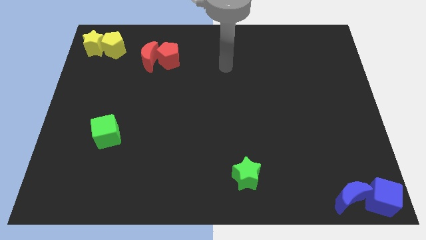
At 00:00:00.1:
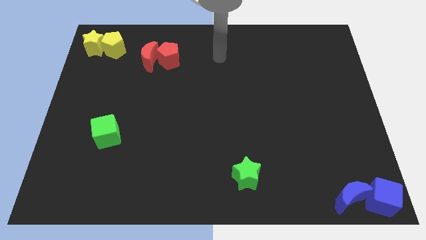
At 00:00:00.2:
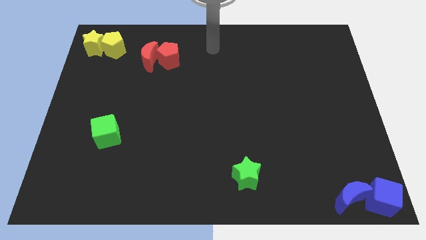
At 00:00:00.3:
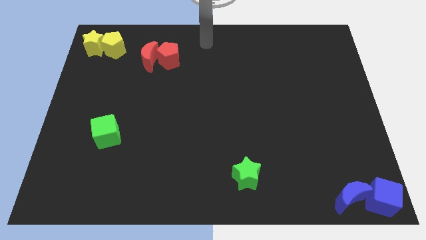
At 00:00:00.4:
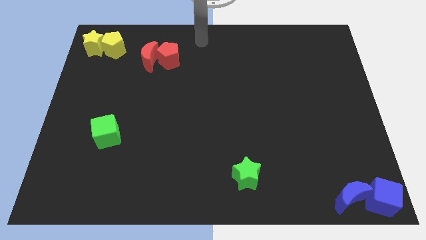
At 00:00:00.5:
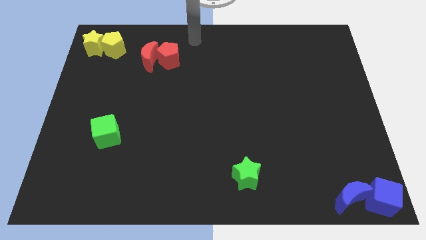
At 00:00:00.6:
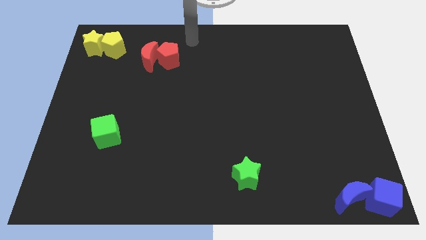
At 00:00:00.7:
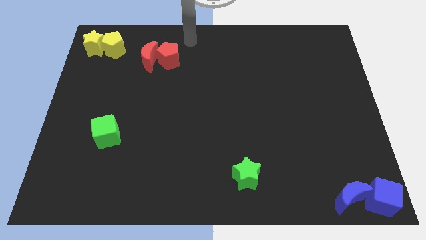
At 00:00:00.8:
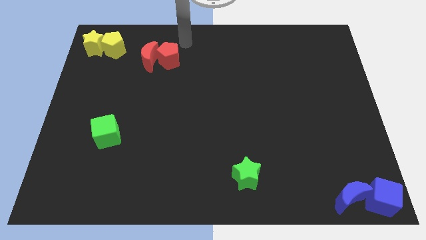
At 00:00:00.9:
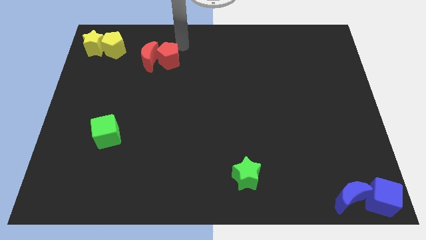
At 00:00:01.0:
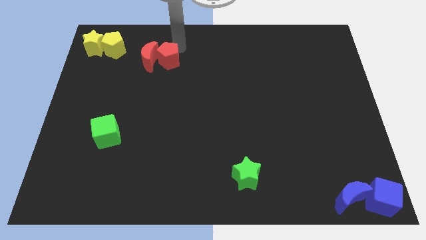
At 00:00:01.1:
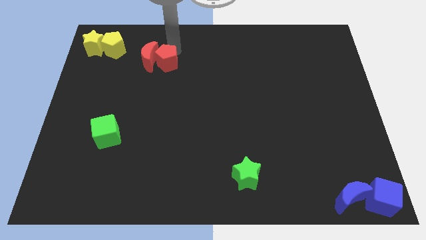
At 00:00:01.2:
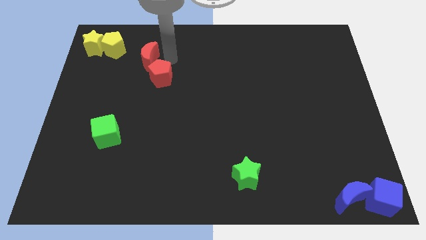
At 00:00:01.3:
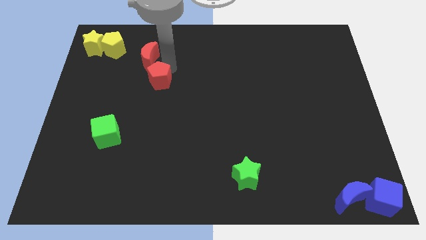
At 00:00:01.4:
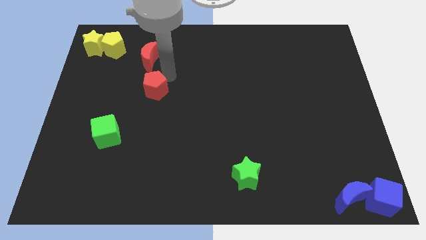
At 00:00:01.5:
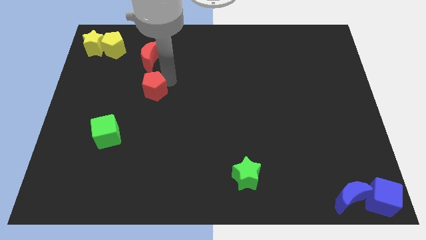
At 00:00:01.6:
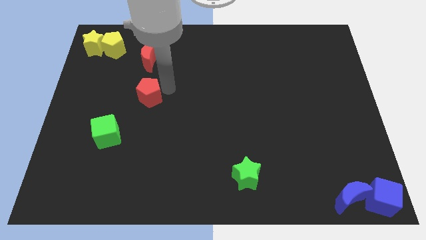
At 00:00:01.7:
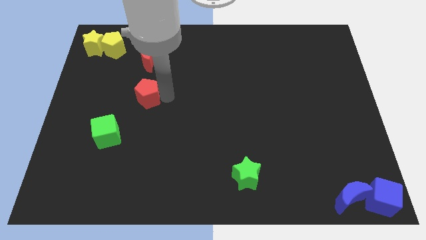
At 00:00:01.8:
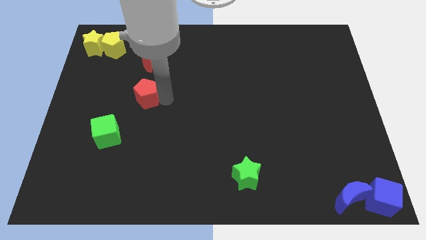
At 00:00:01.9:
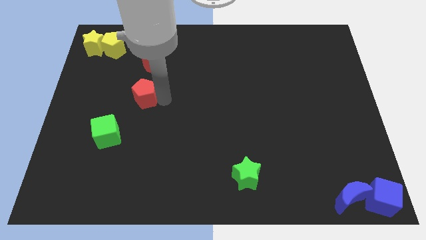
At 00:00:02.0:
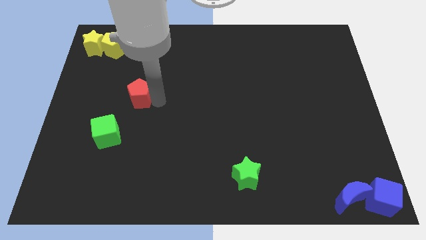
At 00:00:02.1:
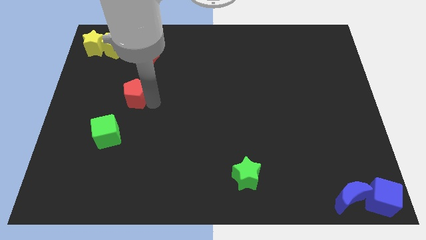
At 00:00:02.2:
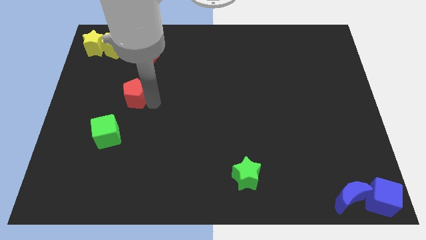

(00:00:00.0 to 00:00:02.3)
separate red pentagon from red moon

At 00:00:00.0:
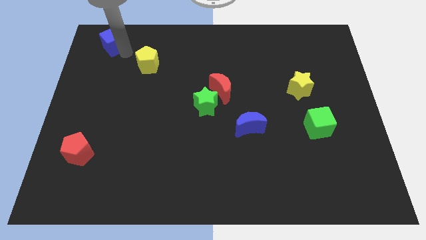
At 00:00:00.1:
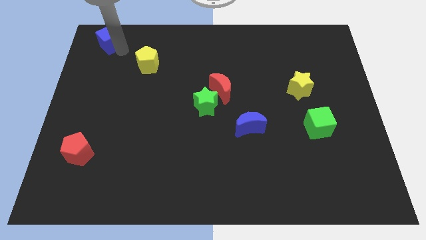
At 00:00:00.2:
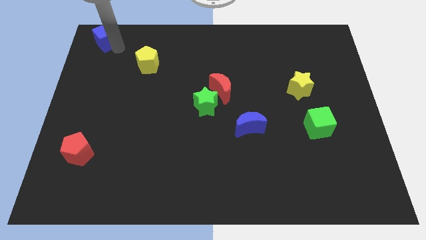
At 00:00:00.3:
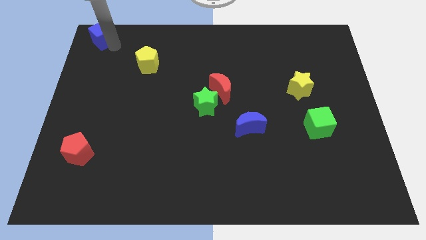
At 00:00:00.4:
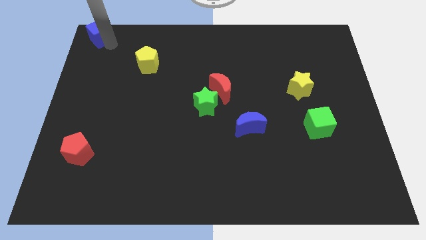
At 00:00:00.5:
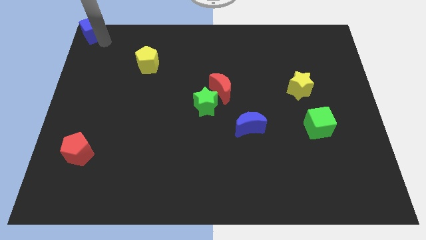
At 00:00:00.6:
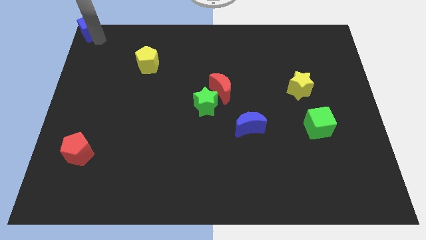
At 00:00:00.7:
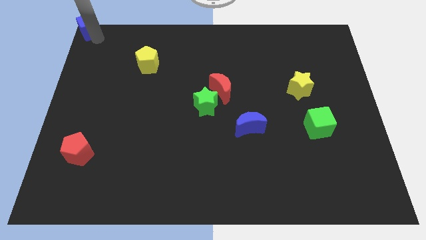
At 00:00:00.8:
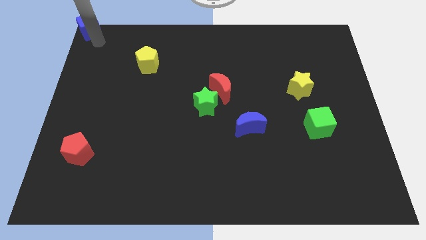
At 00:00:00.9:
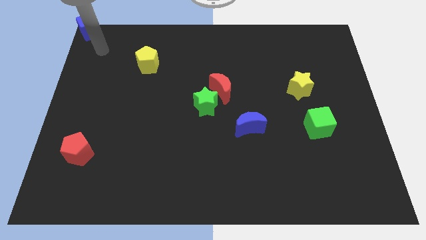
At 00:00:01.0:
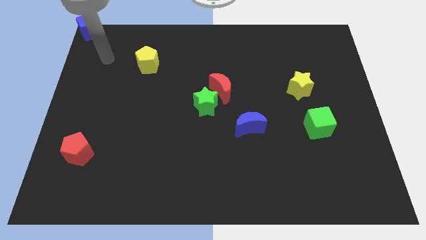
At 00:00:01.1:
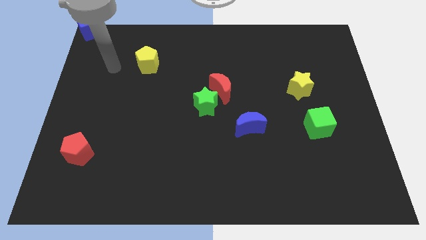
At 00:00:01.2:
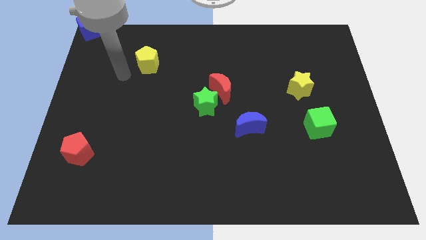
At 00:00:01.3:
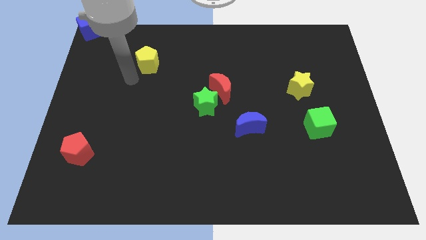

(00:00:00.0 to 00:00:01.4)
place the blue cube towards the top left corner of the board

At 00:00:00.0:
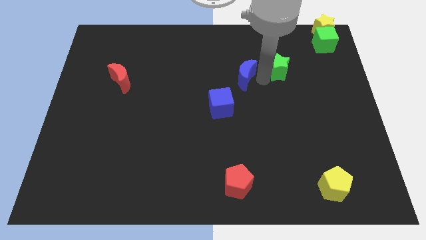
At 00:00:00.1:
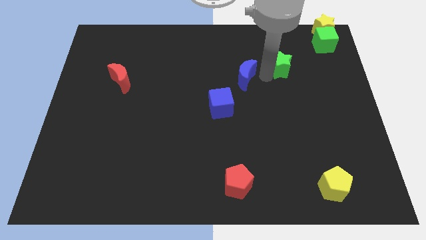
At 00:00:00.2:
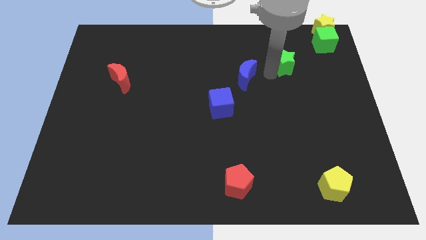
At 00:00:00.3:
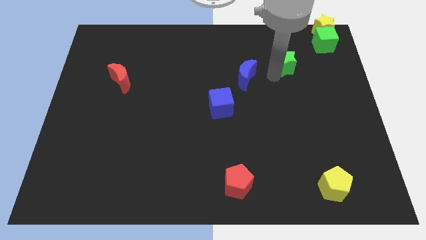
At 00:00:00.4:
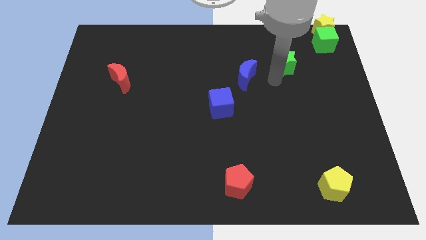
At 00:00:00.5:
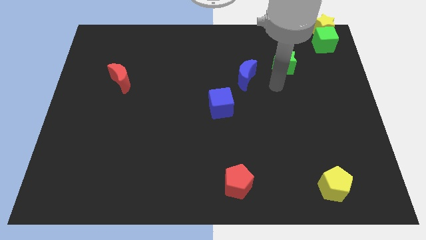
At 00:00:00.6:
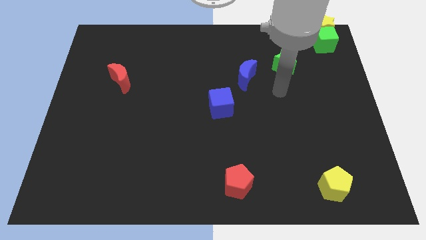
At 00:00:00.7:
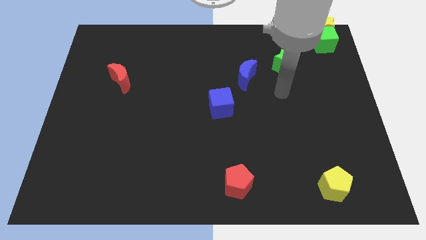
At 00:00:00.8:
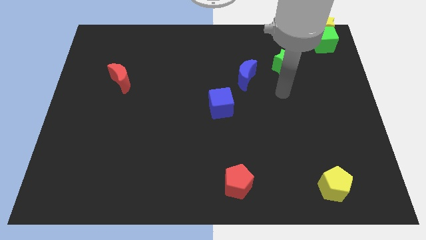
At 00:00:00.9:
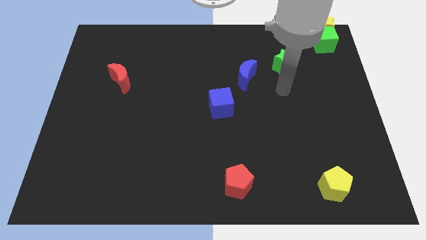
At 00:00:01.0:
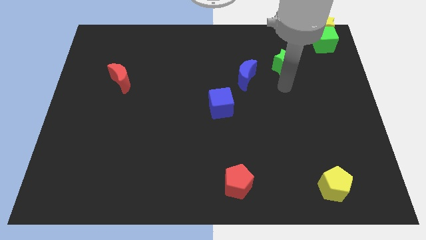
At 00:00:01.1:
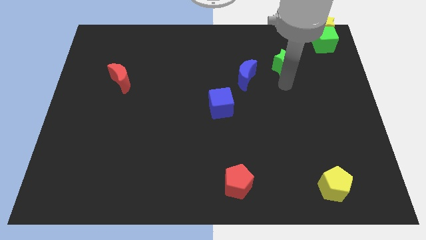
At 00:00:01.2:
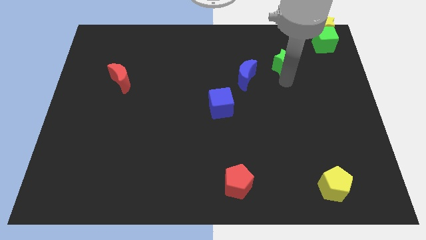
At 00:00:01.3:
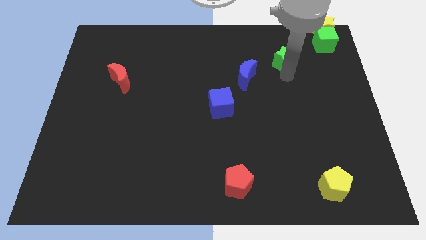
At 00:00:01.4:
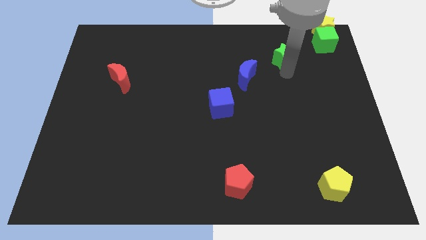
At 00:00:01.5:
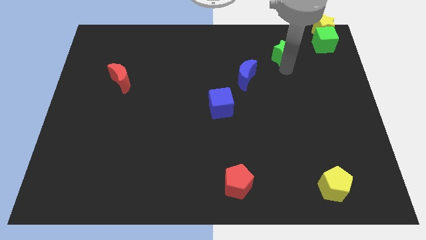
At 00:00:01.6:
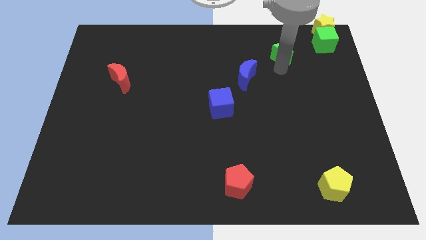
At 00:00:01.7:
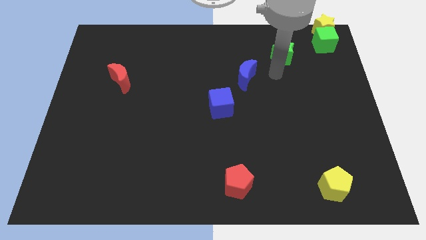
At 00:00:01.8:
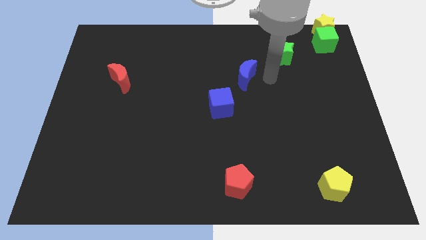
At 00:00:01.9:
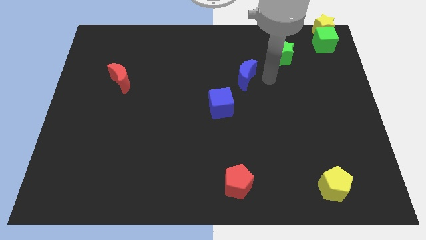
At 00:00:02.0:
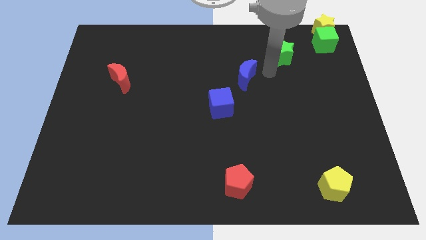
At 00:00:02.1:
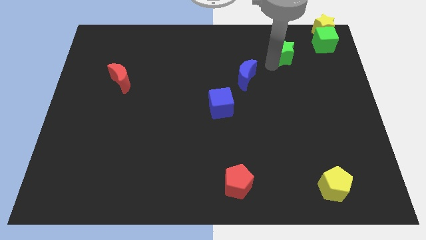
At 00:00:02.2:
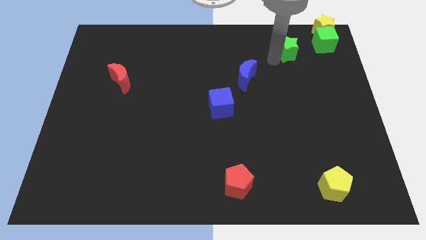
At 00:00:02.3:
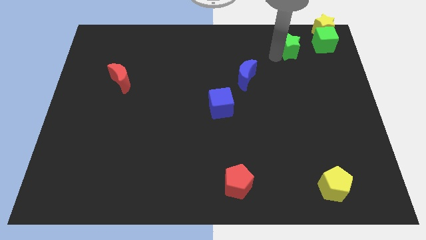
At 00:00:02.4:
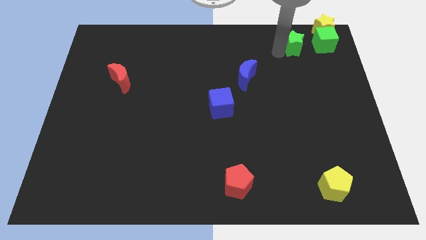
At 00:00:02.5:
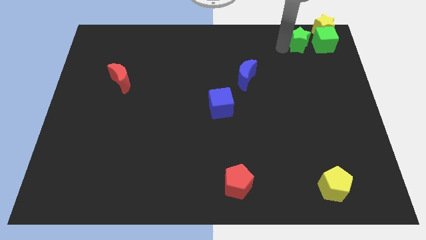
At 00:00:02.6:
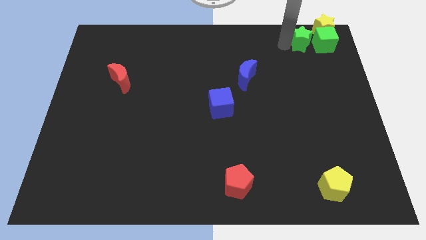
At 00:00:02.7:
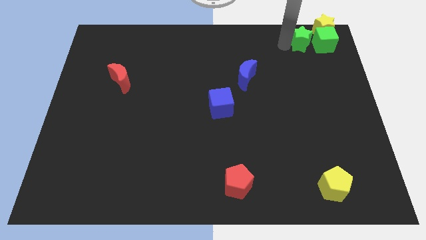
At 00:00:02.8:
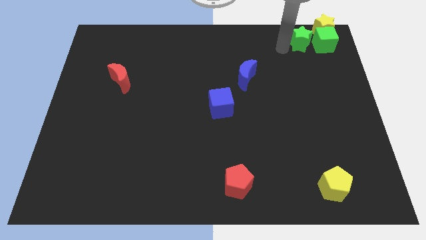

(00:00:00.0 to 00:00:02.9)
move the green star to the left of the green cube

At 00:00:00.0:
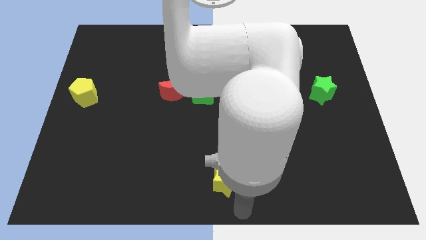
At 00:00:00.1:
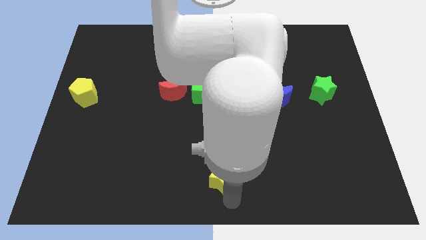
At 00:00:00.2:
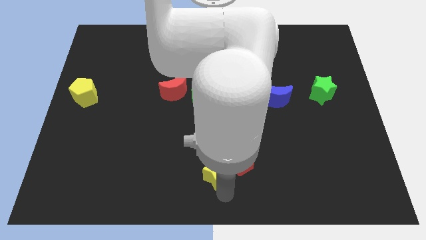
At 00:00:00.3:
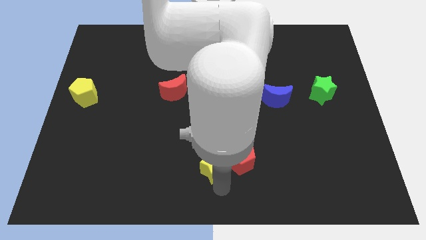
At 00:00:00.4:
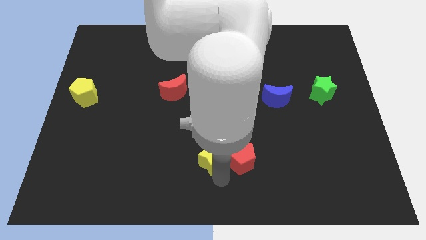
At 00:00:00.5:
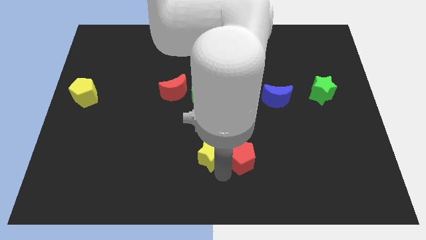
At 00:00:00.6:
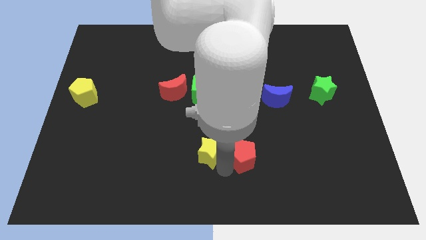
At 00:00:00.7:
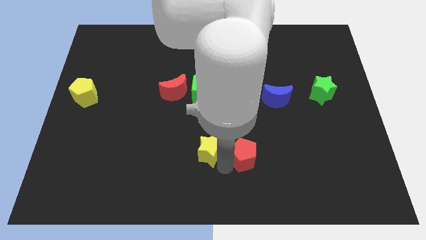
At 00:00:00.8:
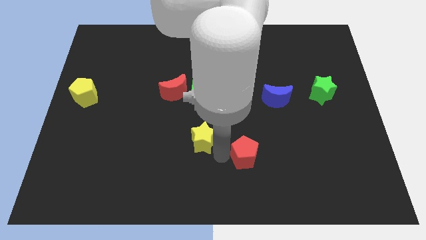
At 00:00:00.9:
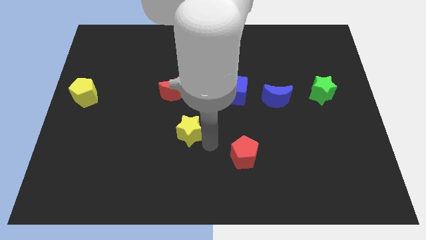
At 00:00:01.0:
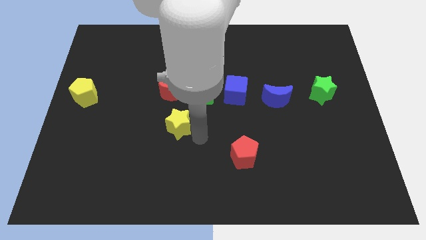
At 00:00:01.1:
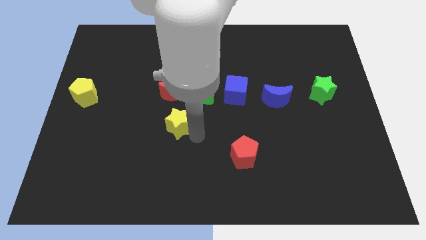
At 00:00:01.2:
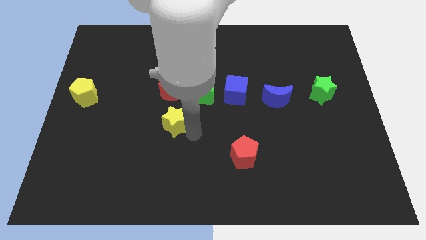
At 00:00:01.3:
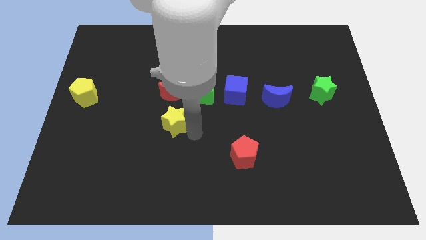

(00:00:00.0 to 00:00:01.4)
drag the yellow star towards the red crescent

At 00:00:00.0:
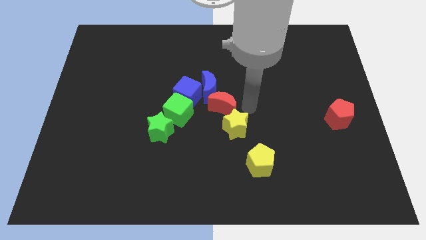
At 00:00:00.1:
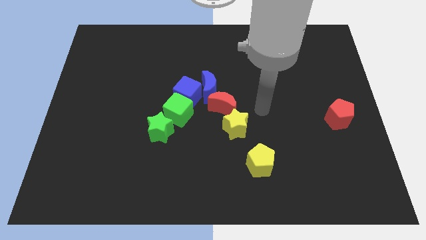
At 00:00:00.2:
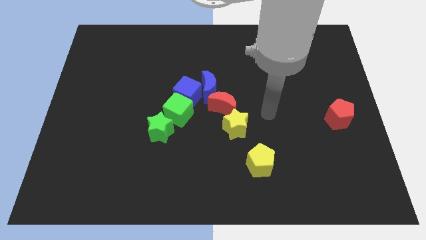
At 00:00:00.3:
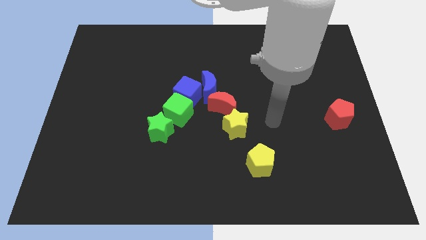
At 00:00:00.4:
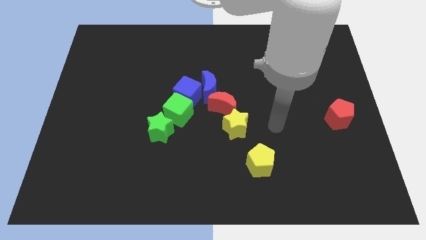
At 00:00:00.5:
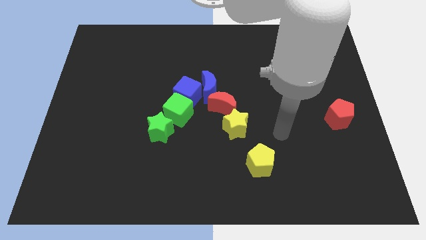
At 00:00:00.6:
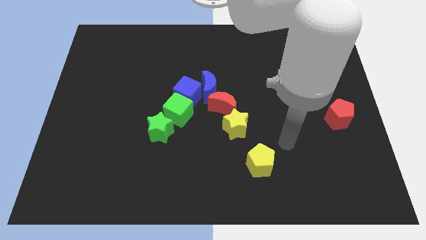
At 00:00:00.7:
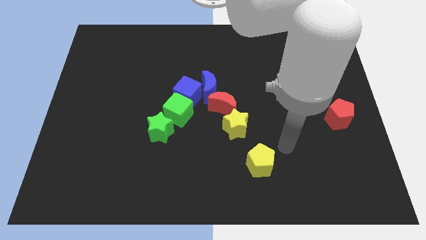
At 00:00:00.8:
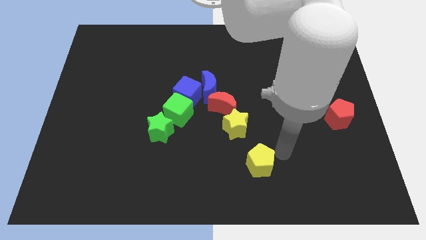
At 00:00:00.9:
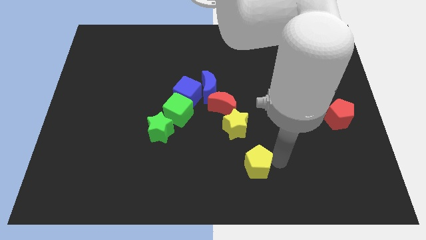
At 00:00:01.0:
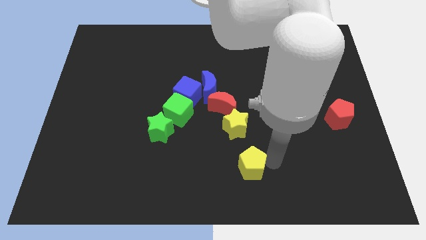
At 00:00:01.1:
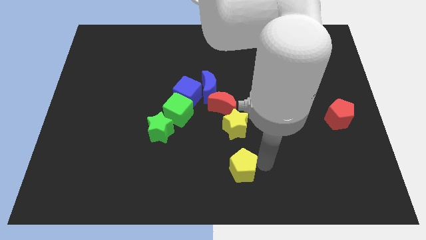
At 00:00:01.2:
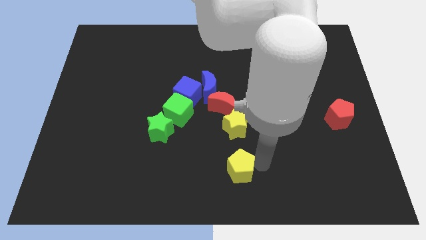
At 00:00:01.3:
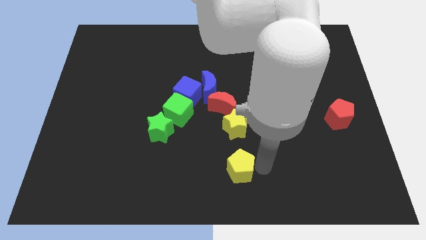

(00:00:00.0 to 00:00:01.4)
move the yellow pentagon to the bottom of the yellow star
